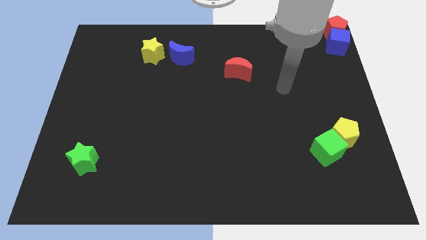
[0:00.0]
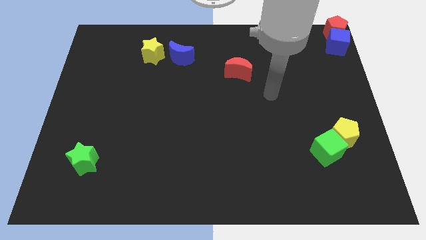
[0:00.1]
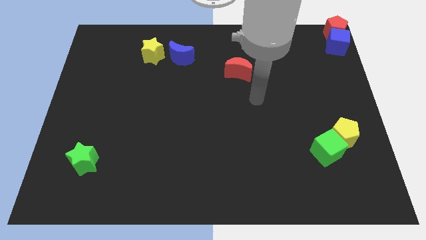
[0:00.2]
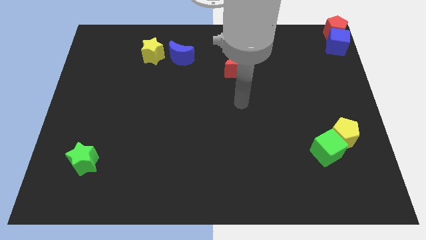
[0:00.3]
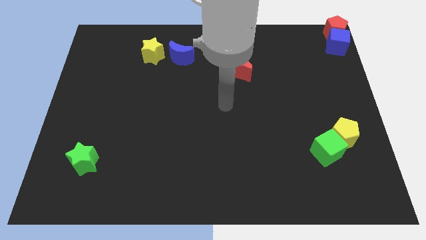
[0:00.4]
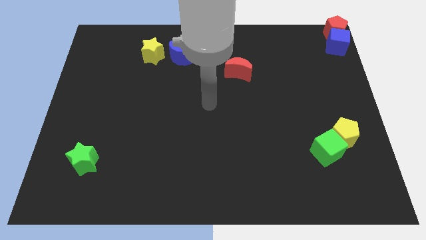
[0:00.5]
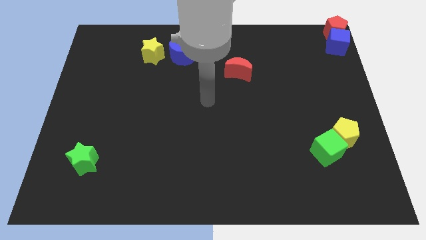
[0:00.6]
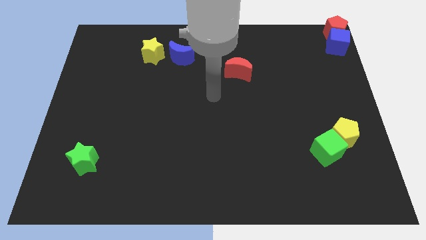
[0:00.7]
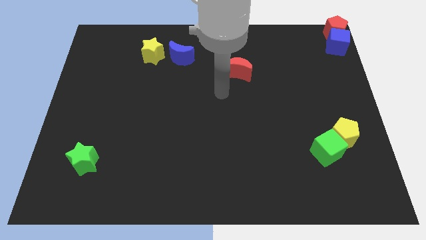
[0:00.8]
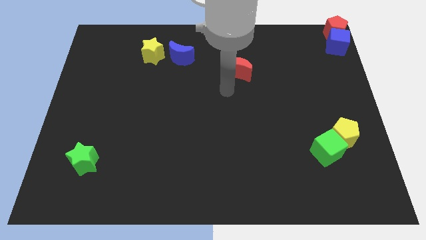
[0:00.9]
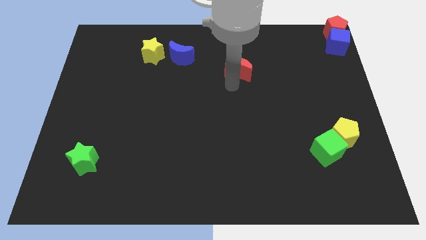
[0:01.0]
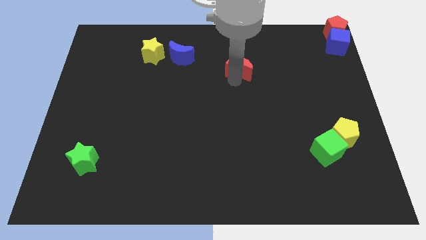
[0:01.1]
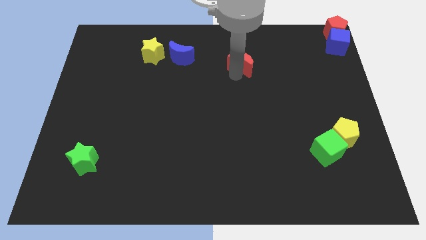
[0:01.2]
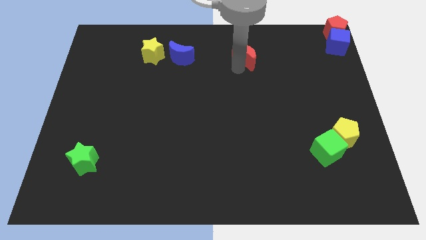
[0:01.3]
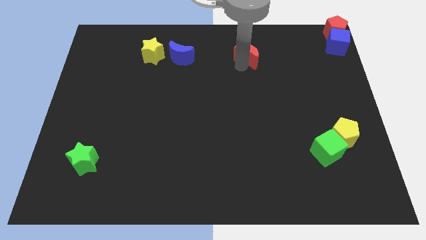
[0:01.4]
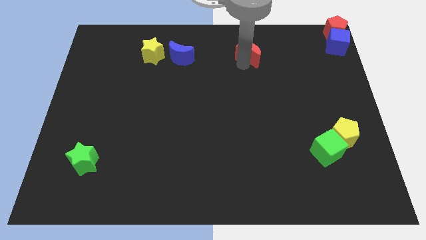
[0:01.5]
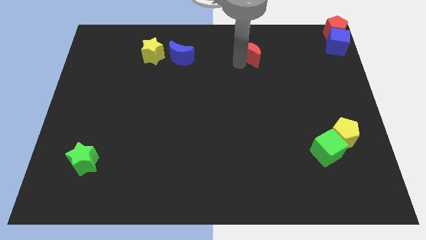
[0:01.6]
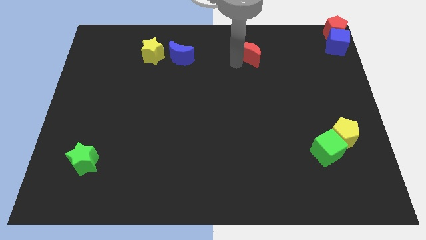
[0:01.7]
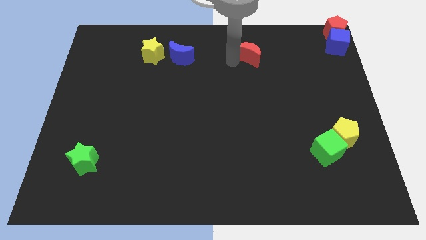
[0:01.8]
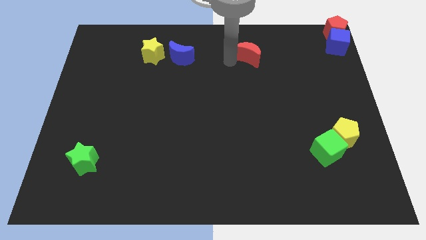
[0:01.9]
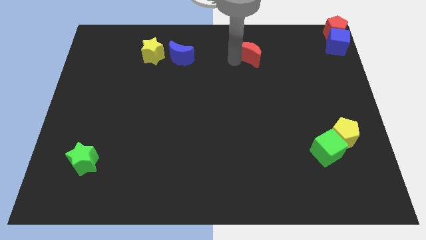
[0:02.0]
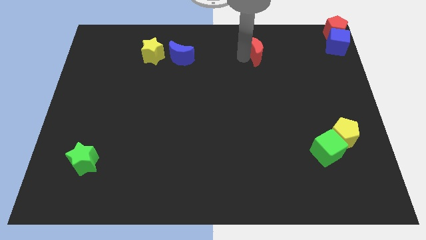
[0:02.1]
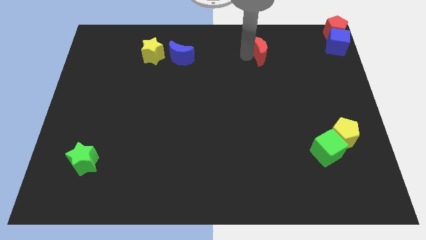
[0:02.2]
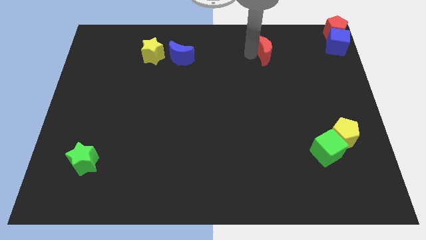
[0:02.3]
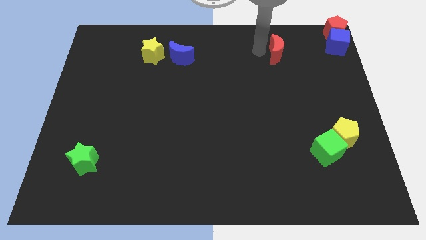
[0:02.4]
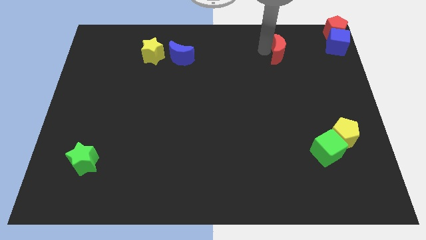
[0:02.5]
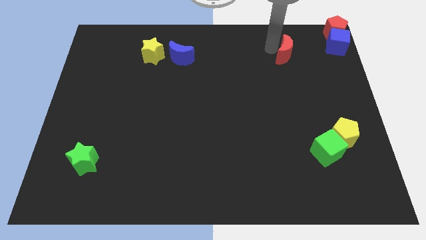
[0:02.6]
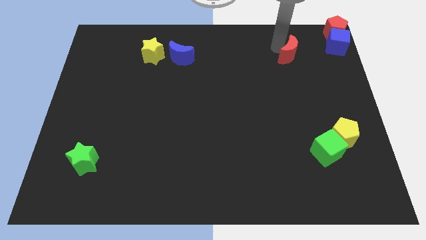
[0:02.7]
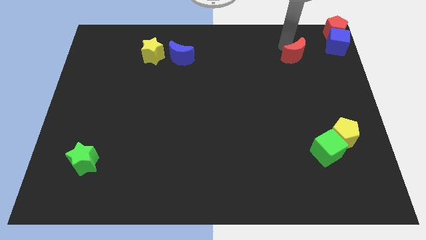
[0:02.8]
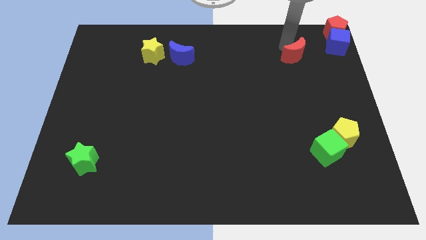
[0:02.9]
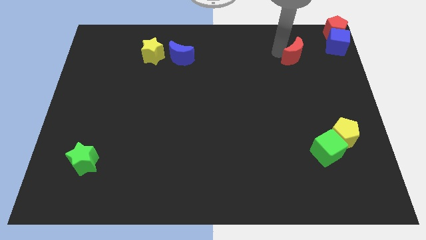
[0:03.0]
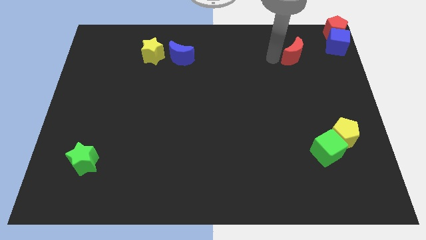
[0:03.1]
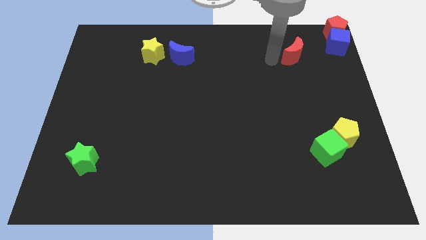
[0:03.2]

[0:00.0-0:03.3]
move the red crescent to the right top of the board

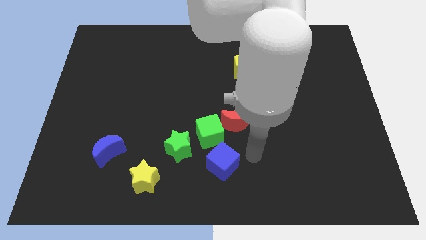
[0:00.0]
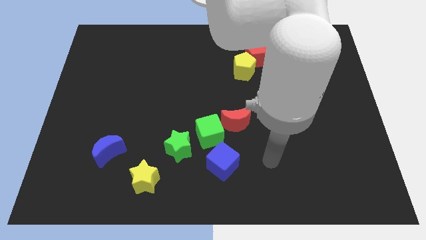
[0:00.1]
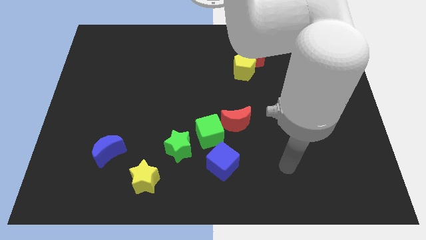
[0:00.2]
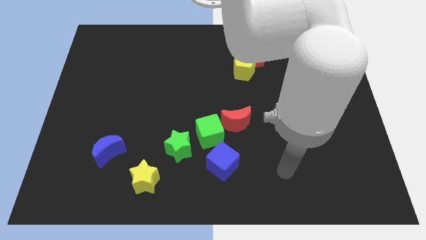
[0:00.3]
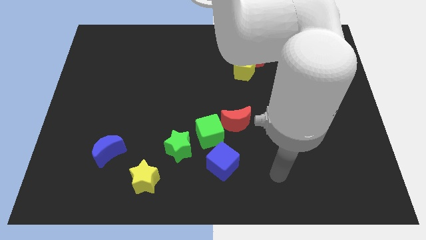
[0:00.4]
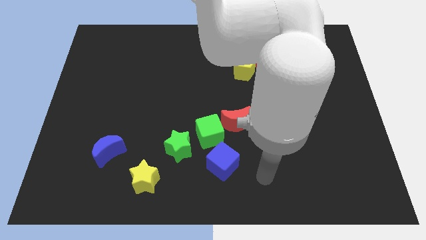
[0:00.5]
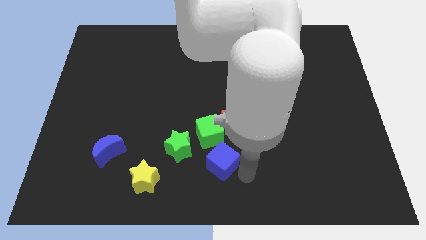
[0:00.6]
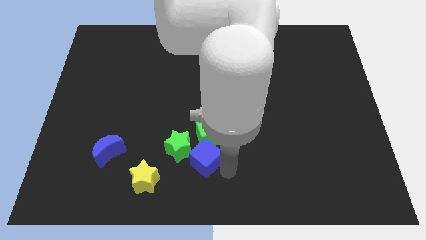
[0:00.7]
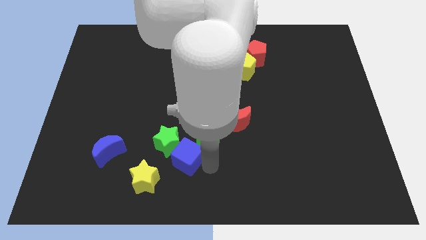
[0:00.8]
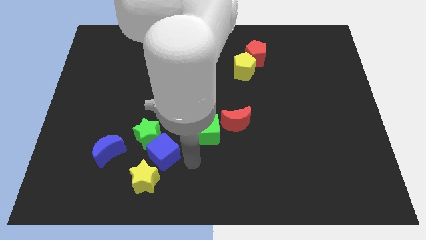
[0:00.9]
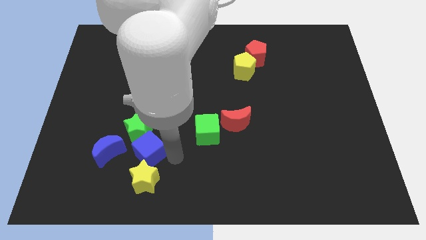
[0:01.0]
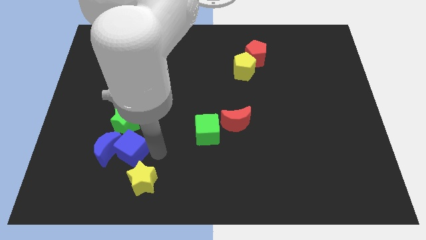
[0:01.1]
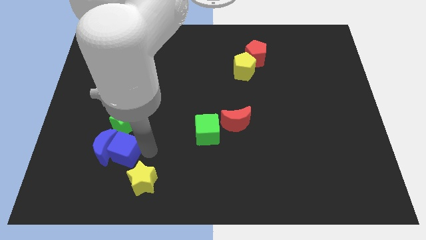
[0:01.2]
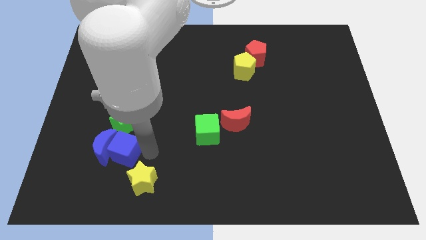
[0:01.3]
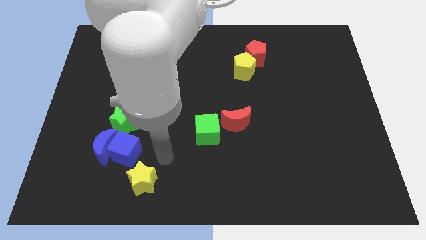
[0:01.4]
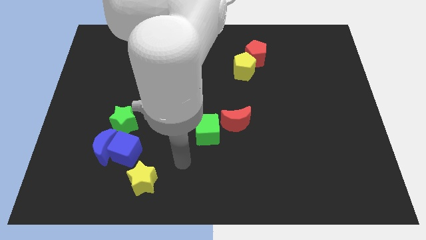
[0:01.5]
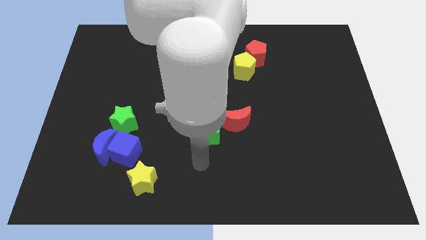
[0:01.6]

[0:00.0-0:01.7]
put the blue cube and blue semicircle together

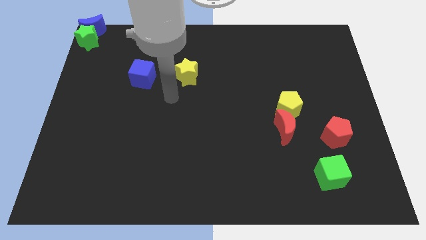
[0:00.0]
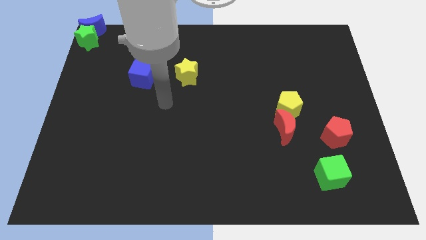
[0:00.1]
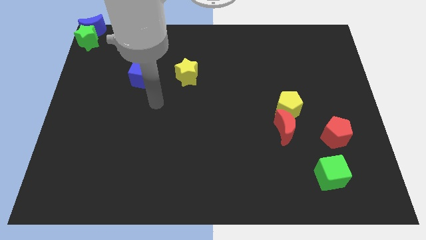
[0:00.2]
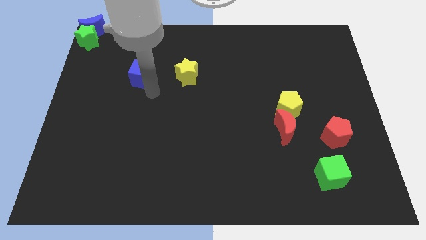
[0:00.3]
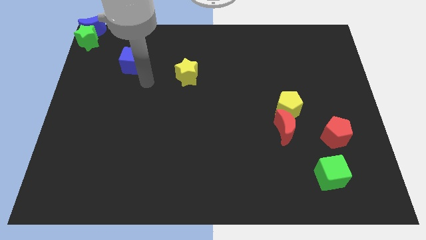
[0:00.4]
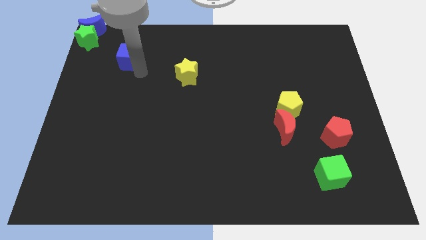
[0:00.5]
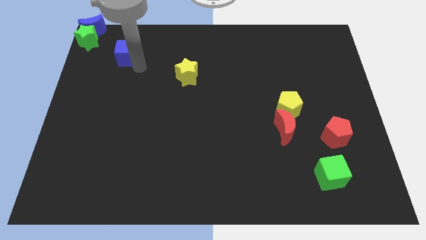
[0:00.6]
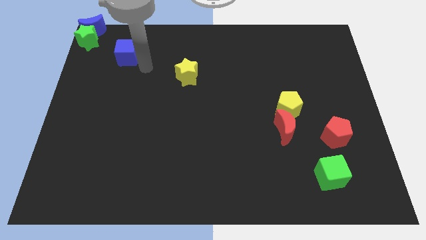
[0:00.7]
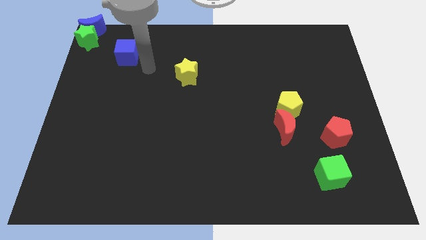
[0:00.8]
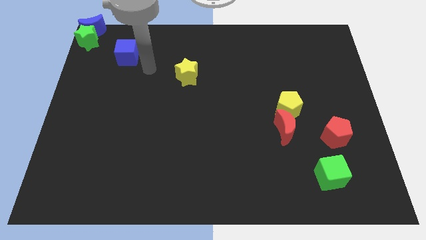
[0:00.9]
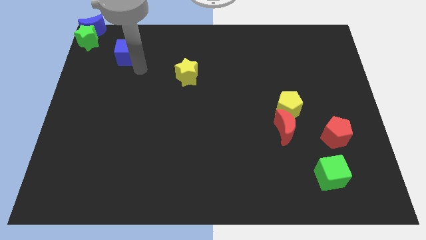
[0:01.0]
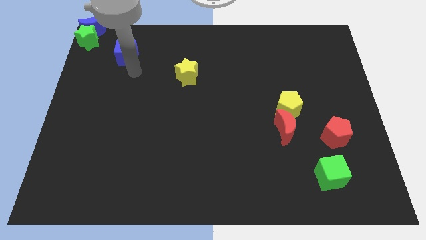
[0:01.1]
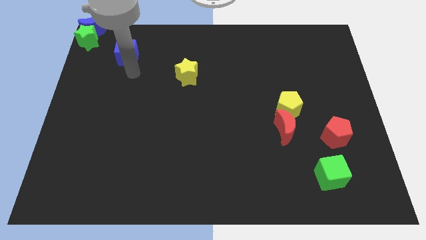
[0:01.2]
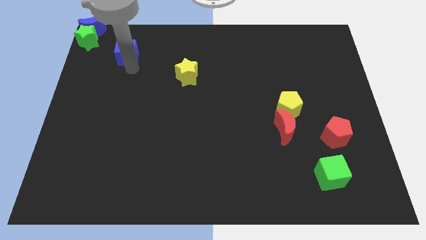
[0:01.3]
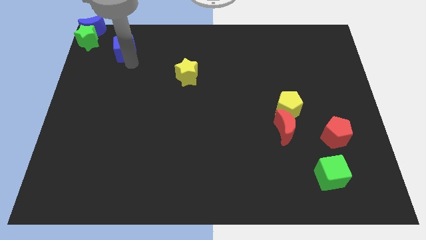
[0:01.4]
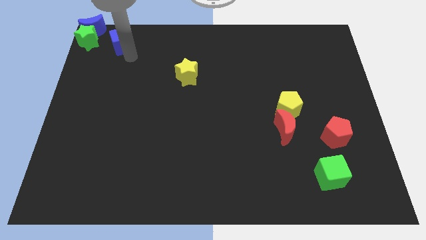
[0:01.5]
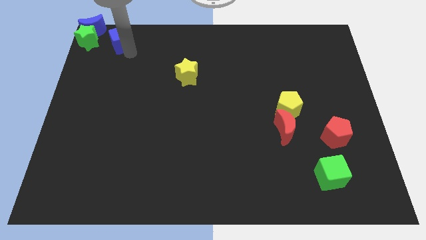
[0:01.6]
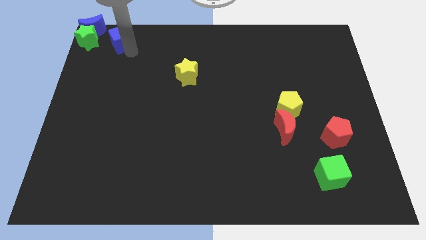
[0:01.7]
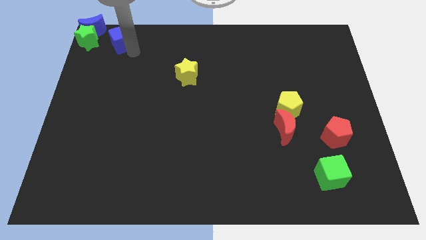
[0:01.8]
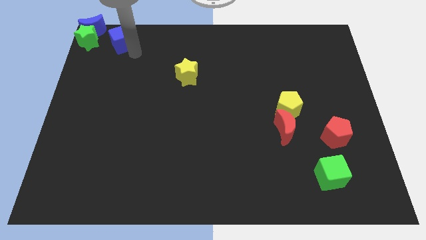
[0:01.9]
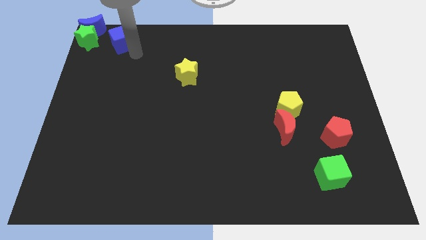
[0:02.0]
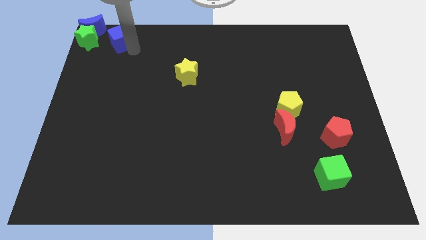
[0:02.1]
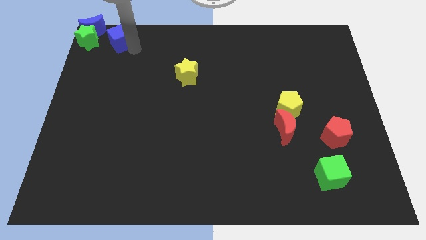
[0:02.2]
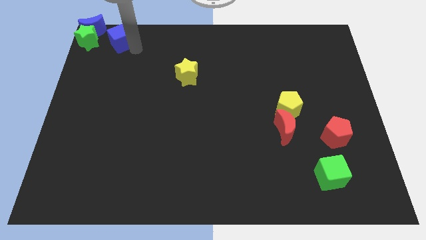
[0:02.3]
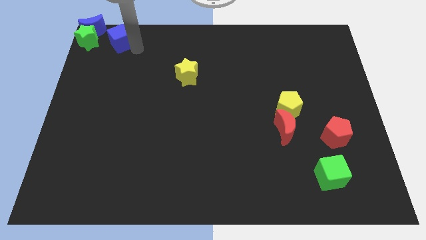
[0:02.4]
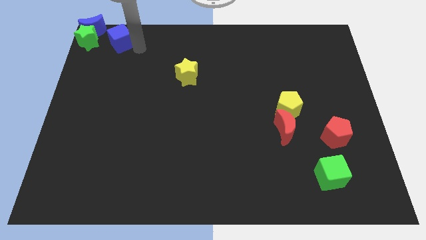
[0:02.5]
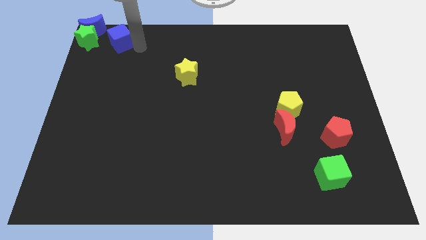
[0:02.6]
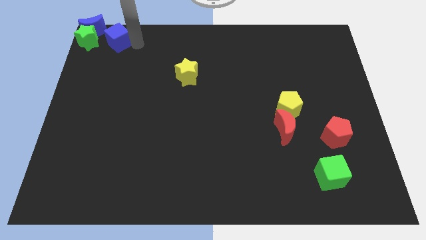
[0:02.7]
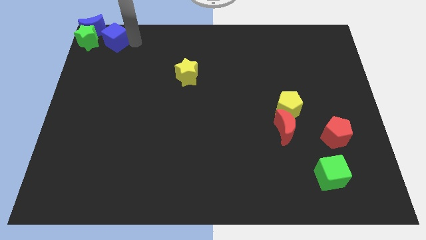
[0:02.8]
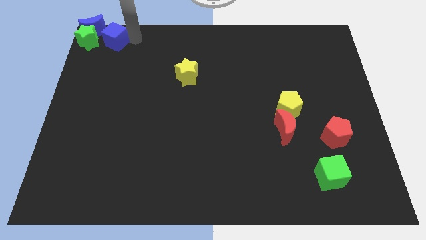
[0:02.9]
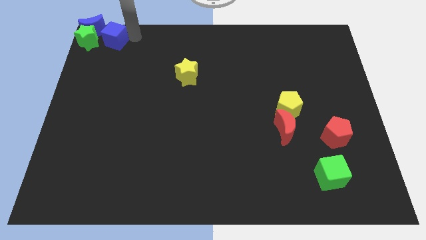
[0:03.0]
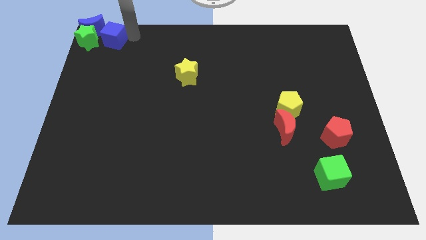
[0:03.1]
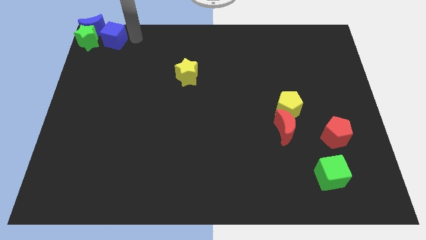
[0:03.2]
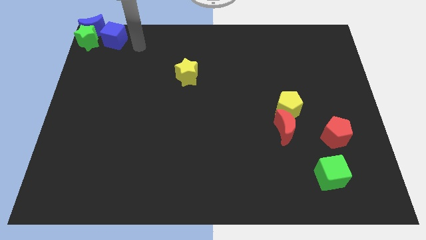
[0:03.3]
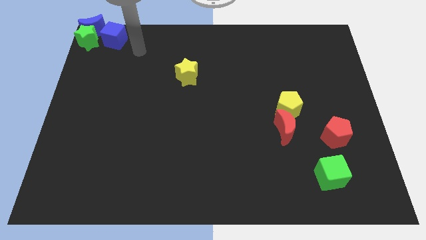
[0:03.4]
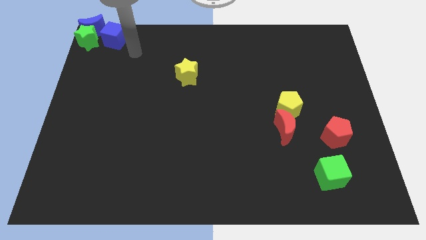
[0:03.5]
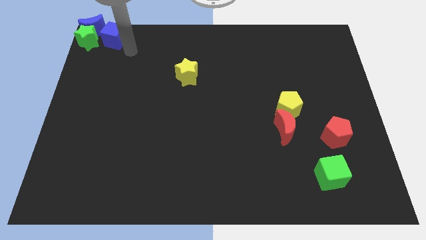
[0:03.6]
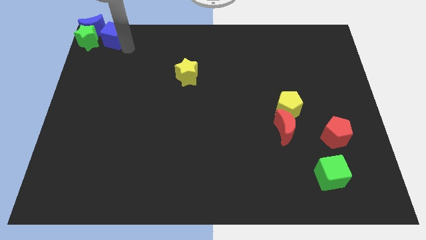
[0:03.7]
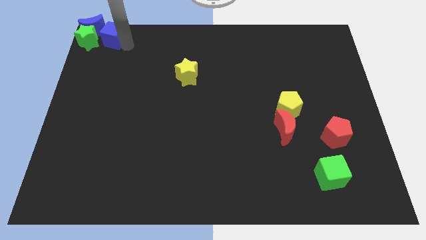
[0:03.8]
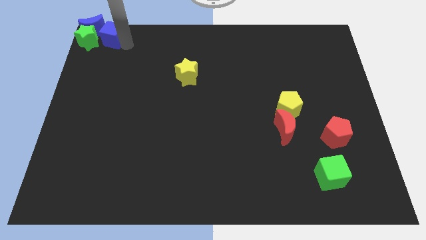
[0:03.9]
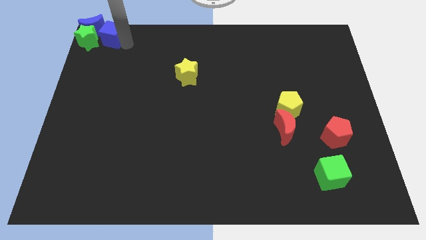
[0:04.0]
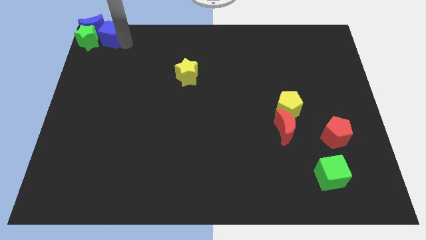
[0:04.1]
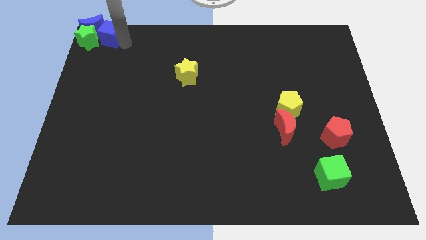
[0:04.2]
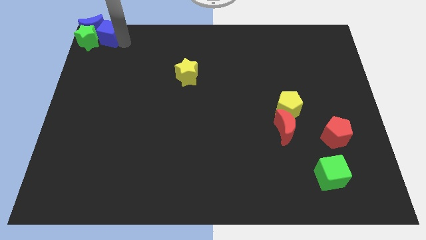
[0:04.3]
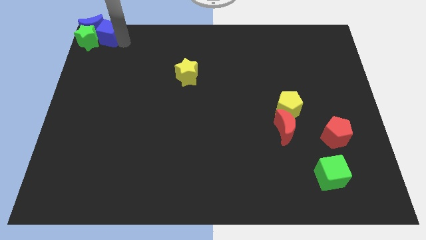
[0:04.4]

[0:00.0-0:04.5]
place the blue cube right to green star
